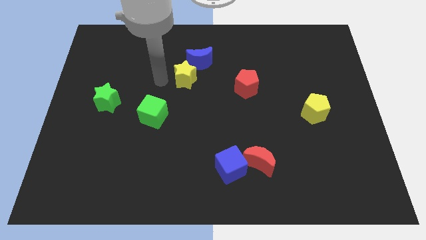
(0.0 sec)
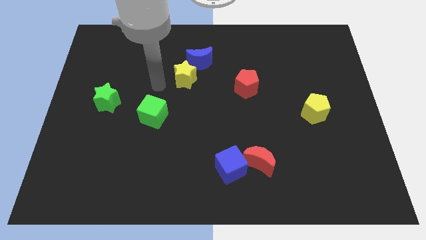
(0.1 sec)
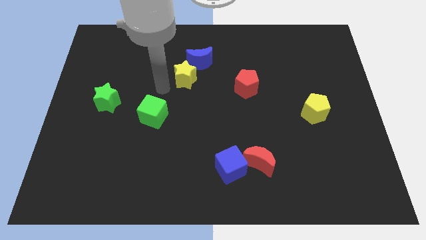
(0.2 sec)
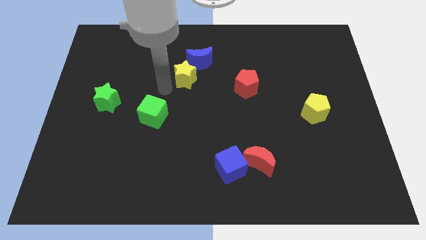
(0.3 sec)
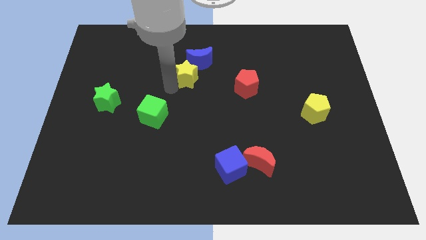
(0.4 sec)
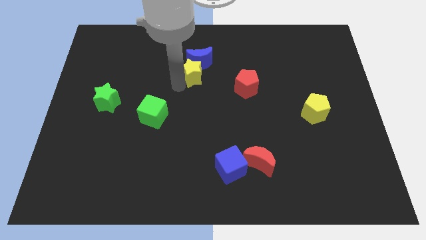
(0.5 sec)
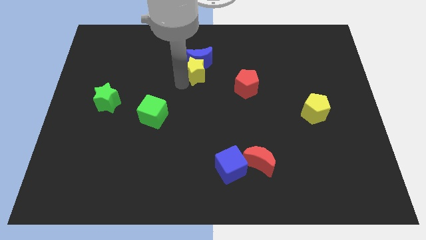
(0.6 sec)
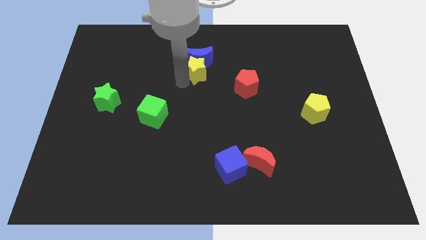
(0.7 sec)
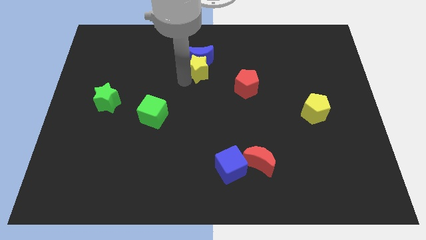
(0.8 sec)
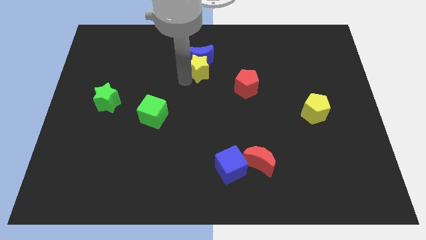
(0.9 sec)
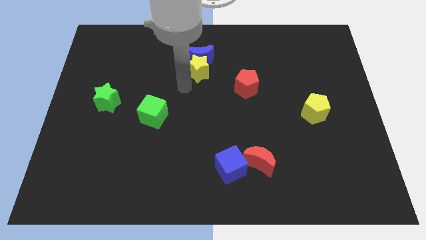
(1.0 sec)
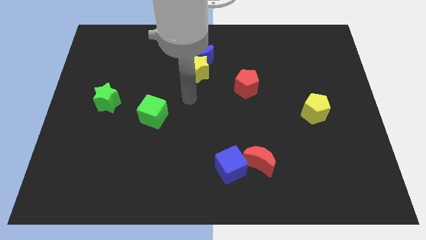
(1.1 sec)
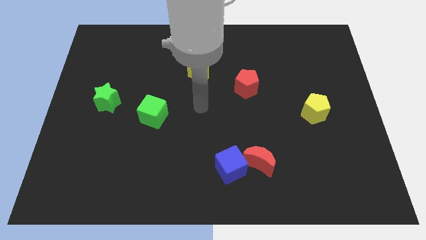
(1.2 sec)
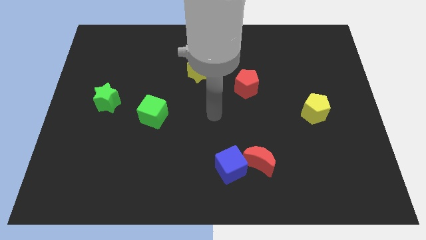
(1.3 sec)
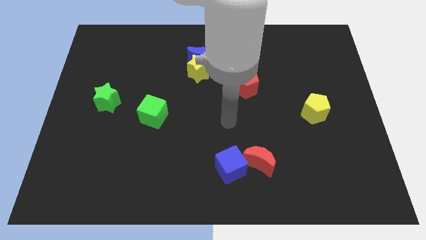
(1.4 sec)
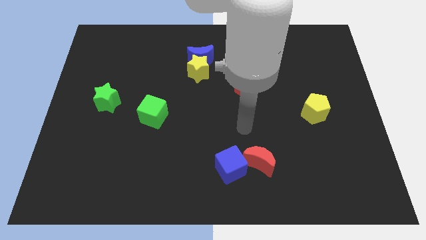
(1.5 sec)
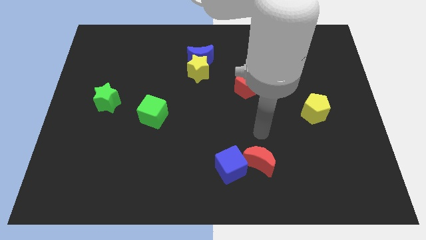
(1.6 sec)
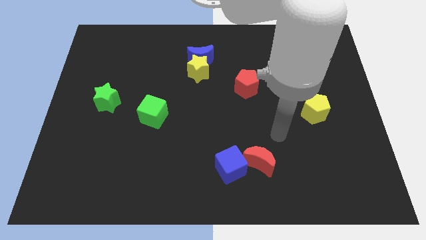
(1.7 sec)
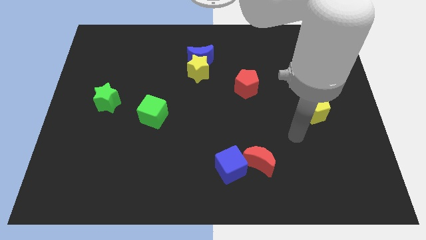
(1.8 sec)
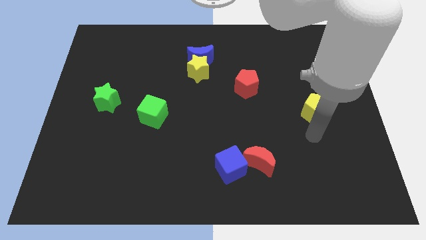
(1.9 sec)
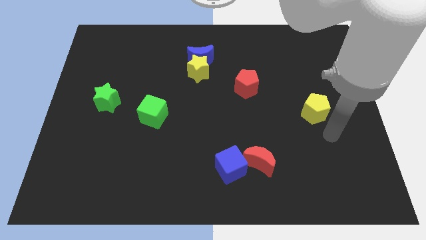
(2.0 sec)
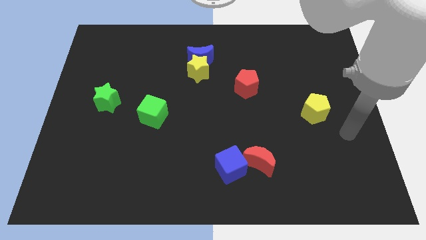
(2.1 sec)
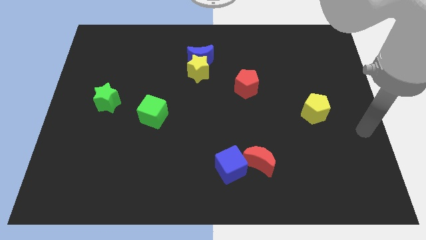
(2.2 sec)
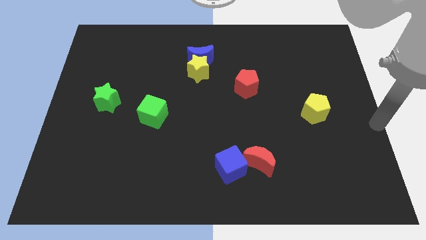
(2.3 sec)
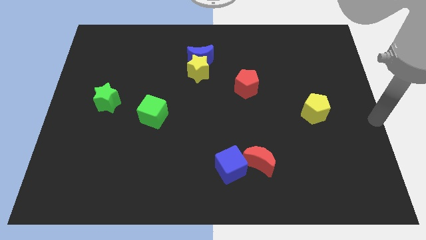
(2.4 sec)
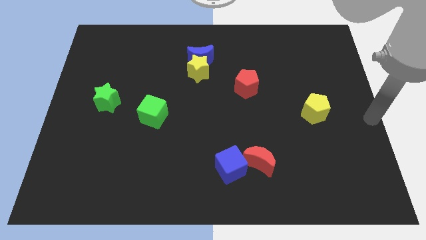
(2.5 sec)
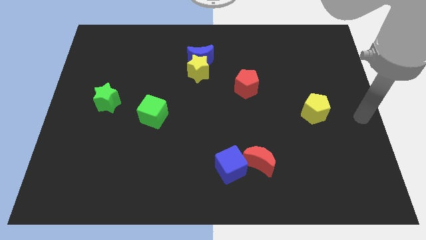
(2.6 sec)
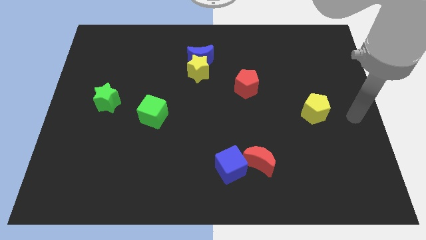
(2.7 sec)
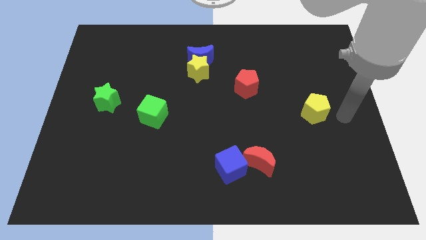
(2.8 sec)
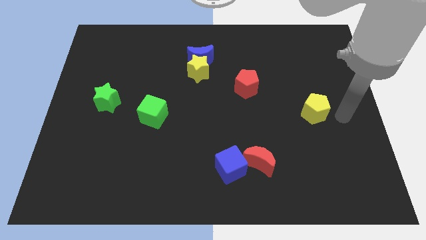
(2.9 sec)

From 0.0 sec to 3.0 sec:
point your arm beside yellow pentagon

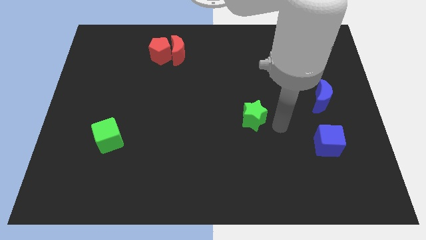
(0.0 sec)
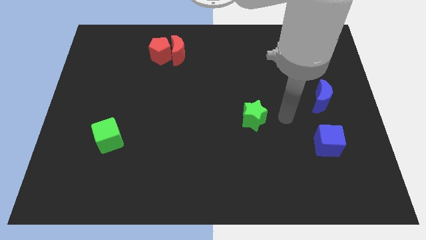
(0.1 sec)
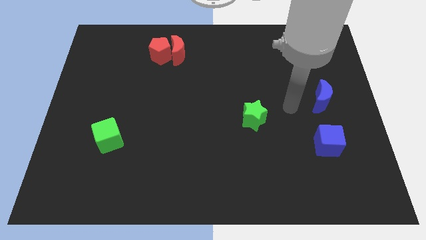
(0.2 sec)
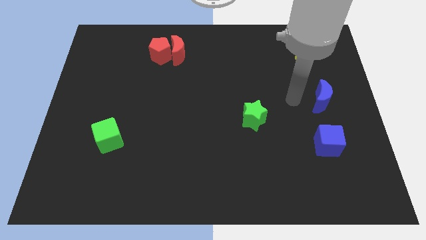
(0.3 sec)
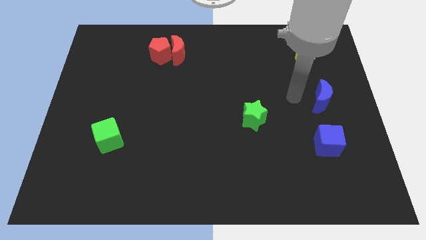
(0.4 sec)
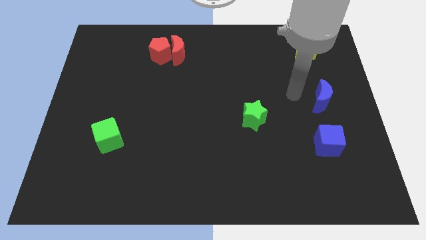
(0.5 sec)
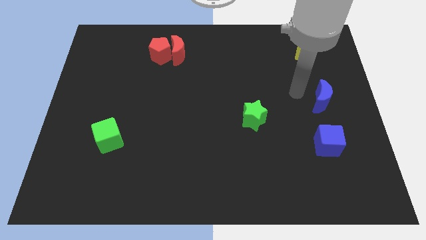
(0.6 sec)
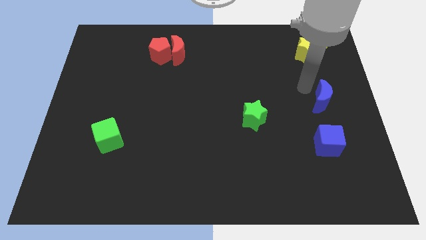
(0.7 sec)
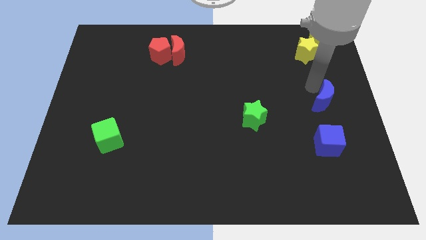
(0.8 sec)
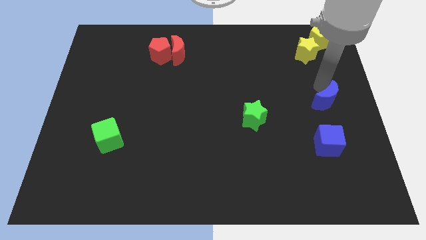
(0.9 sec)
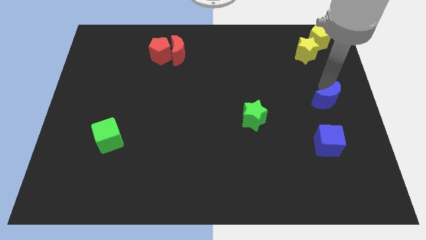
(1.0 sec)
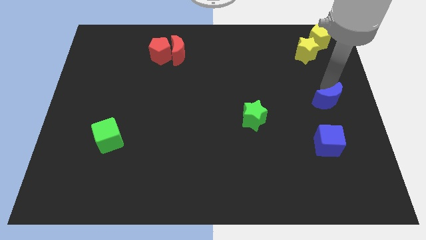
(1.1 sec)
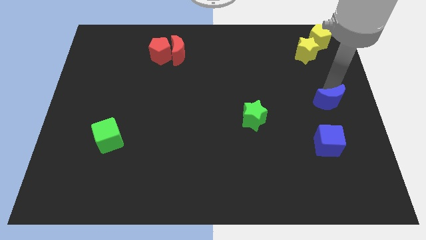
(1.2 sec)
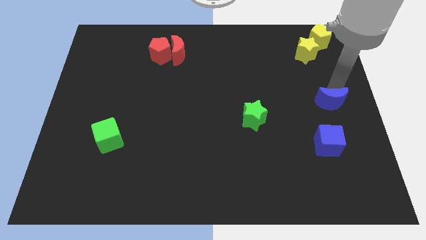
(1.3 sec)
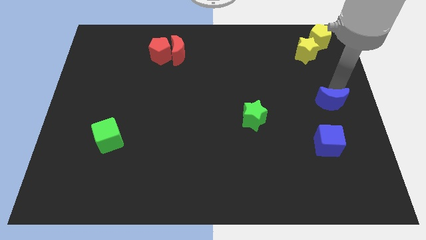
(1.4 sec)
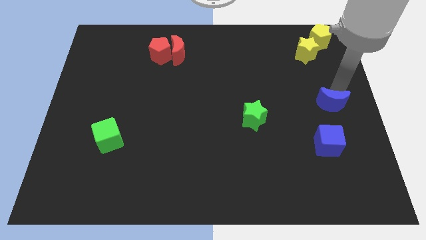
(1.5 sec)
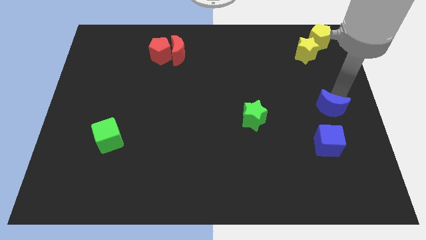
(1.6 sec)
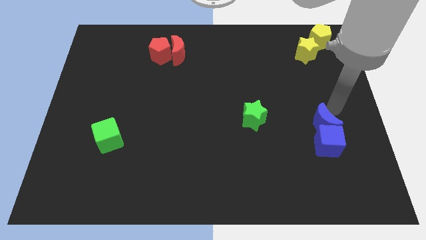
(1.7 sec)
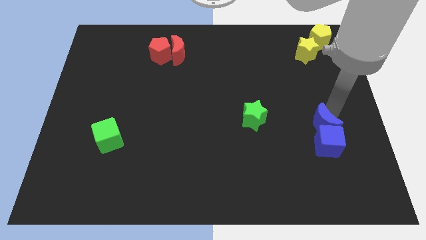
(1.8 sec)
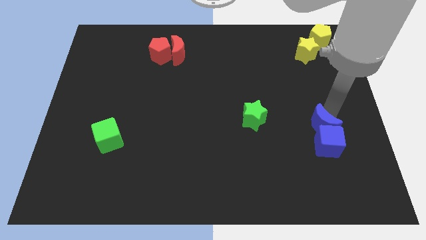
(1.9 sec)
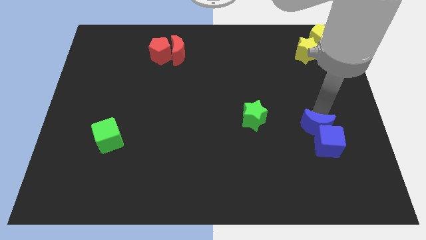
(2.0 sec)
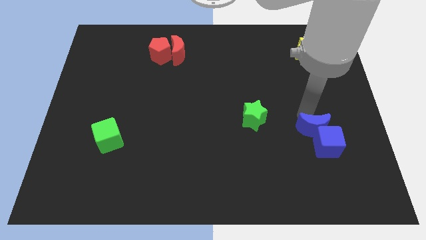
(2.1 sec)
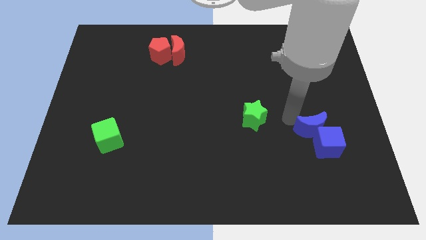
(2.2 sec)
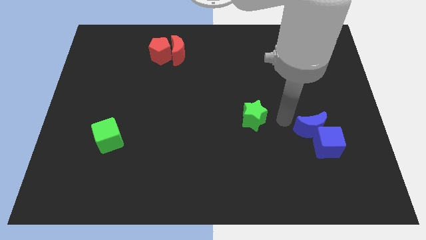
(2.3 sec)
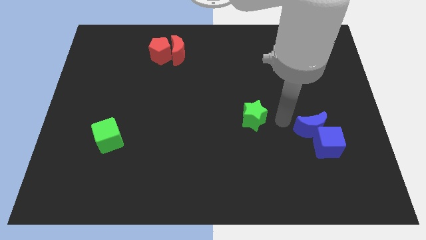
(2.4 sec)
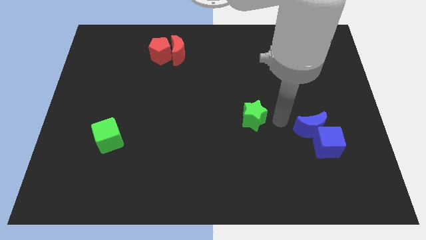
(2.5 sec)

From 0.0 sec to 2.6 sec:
place the blue crescent above the blue cube

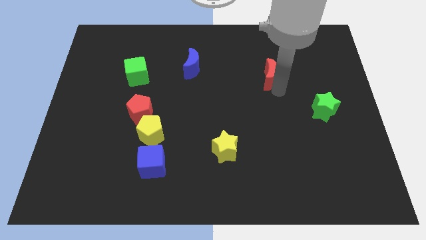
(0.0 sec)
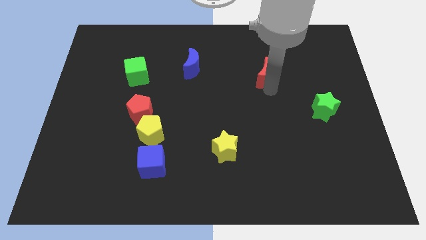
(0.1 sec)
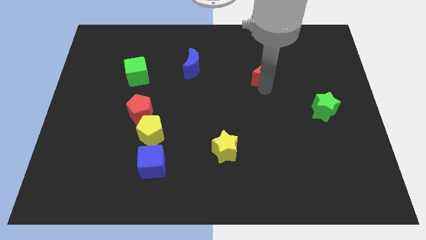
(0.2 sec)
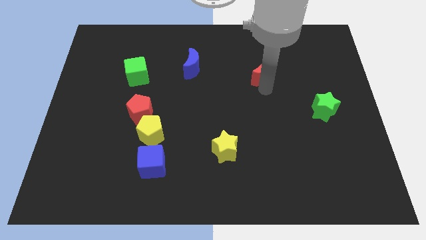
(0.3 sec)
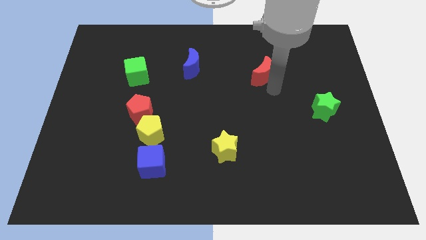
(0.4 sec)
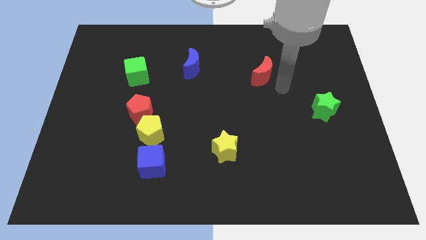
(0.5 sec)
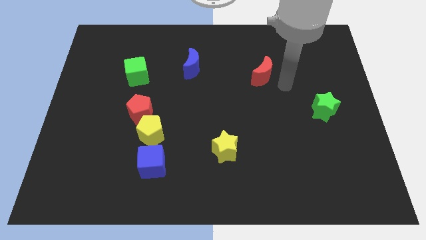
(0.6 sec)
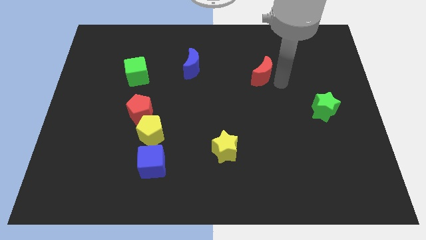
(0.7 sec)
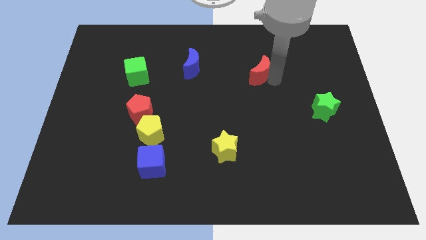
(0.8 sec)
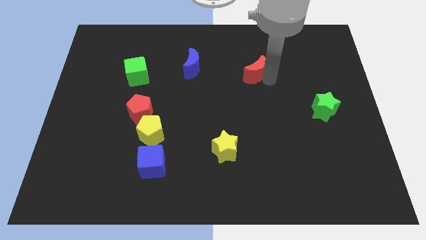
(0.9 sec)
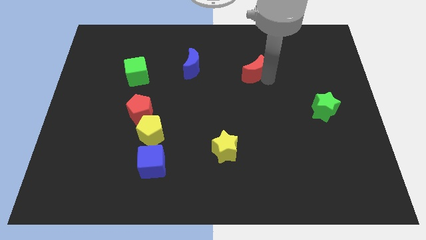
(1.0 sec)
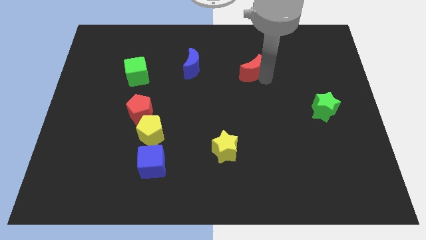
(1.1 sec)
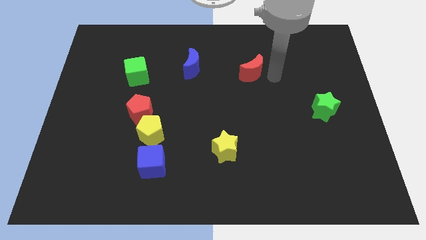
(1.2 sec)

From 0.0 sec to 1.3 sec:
push the red moon diagonally top right to yellow star

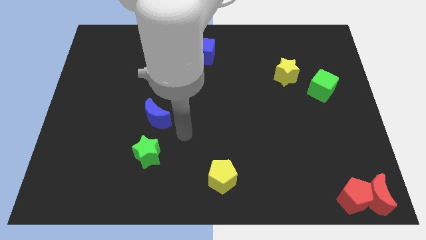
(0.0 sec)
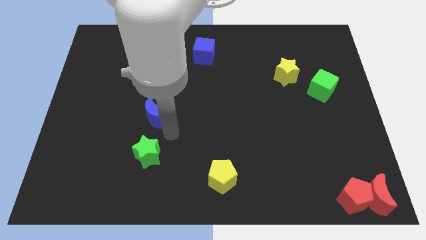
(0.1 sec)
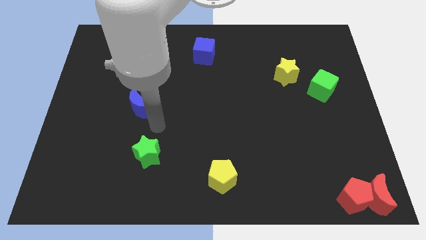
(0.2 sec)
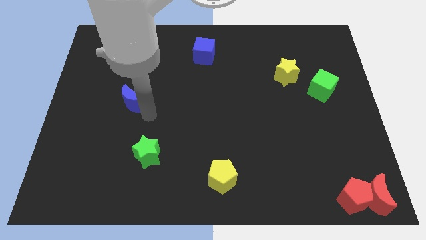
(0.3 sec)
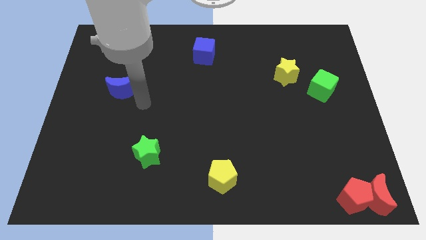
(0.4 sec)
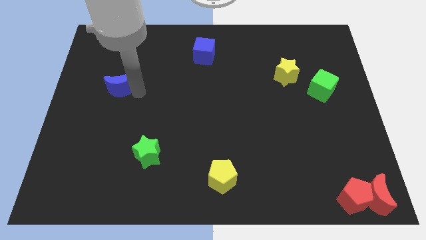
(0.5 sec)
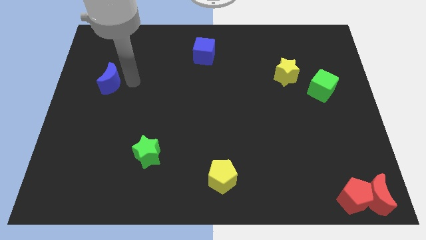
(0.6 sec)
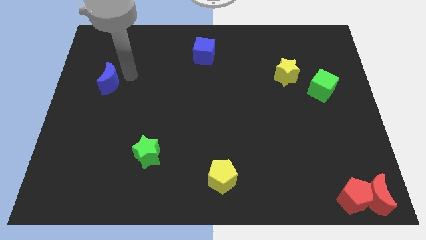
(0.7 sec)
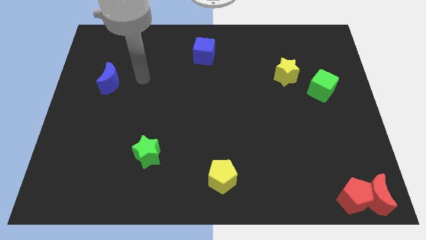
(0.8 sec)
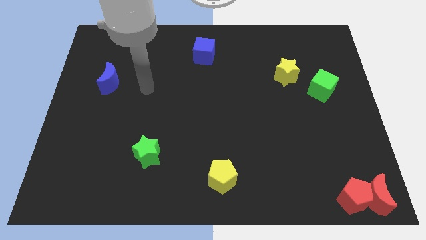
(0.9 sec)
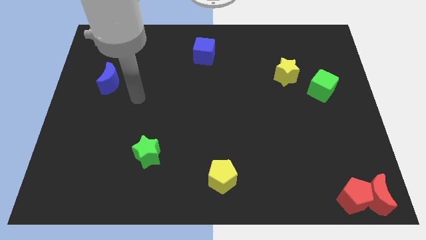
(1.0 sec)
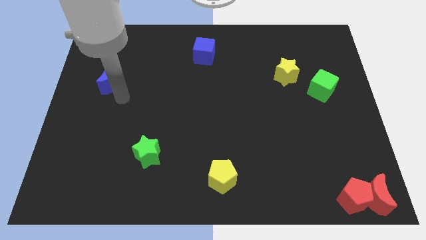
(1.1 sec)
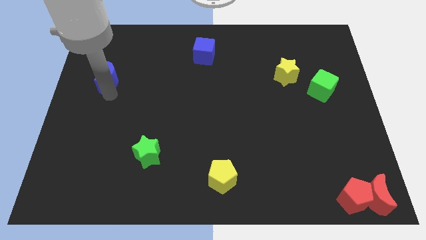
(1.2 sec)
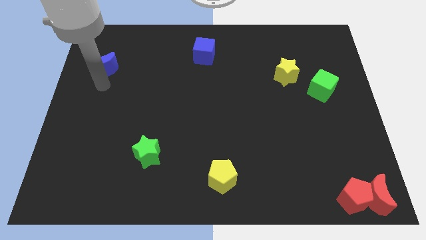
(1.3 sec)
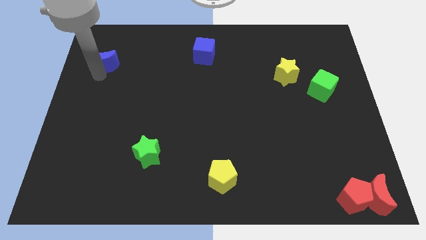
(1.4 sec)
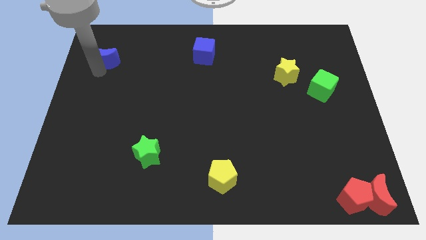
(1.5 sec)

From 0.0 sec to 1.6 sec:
move the blue crescent away from the green star

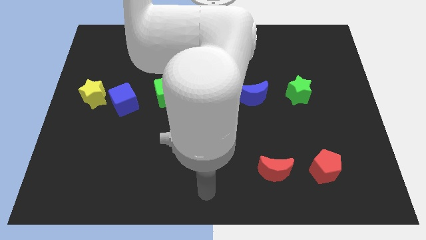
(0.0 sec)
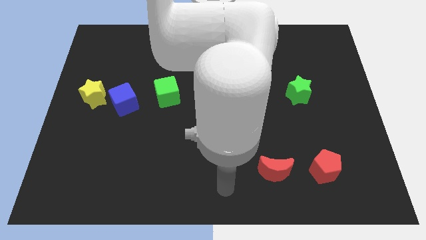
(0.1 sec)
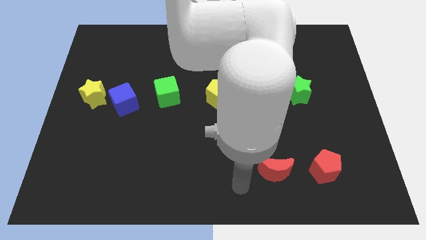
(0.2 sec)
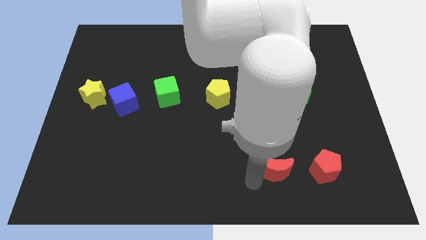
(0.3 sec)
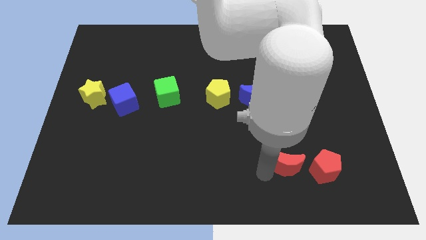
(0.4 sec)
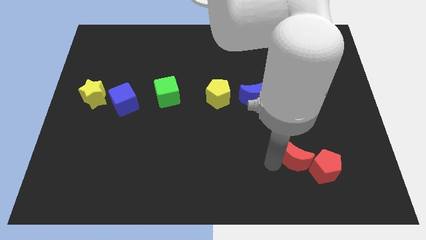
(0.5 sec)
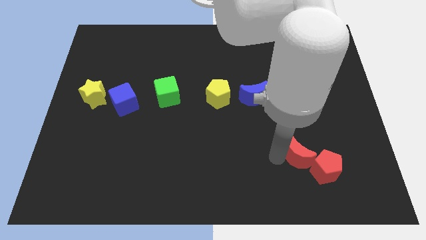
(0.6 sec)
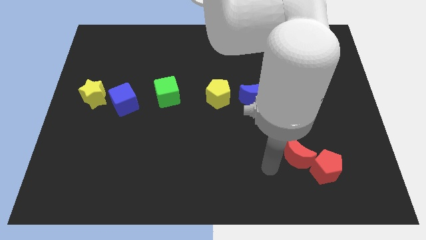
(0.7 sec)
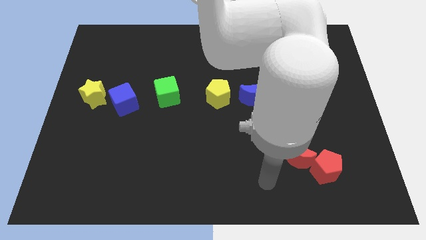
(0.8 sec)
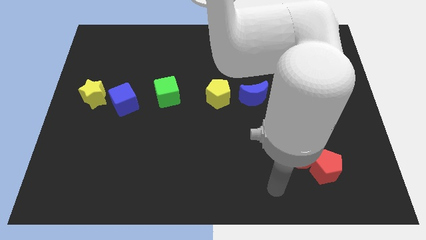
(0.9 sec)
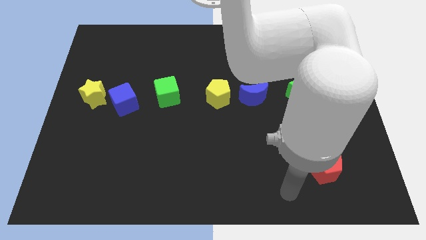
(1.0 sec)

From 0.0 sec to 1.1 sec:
push red moon close to red pentagon
